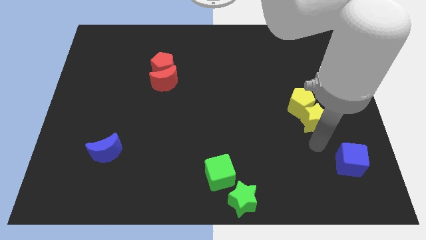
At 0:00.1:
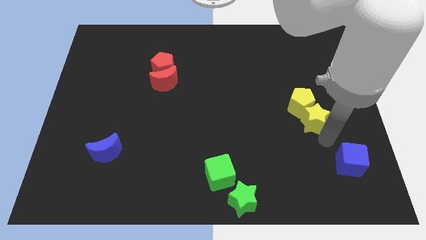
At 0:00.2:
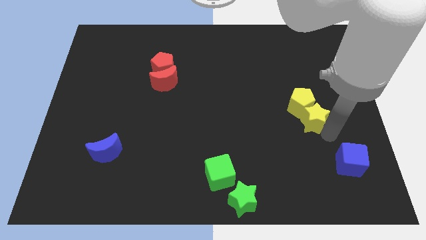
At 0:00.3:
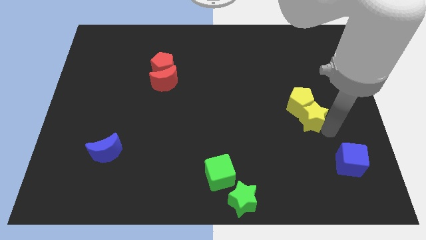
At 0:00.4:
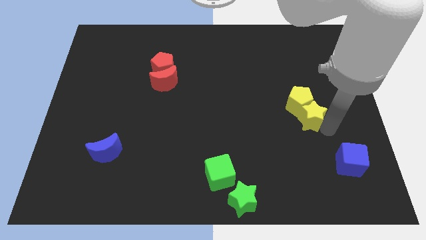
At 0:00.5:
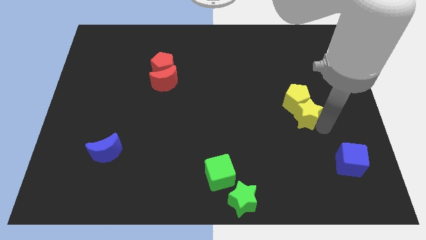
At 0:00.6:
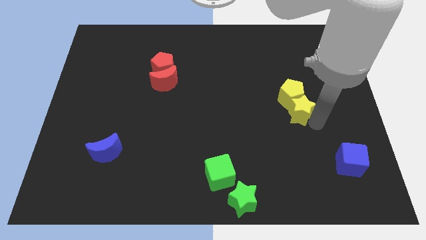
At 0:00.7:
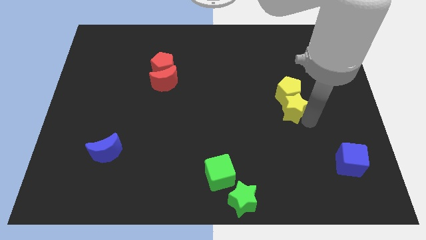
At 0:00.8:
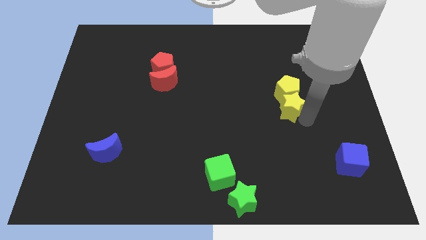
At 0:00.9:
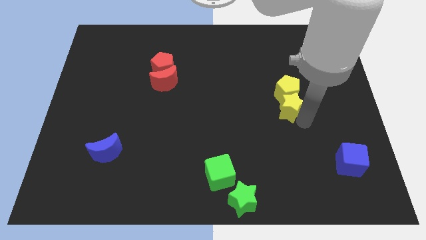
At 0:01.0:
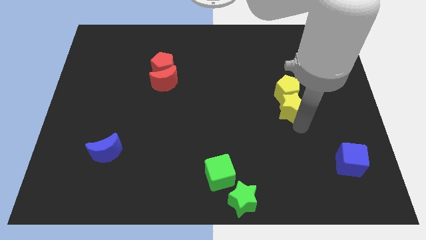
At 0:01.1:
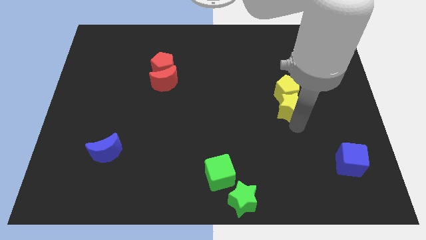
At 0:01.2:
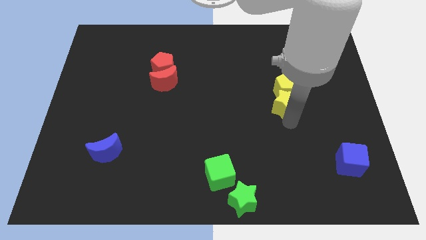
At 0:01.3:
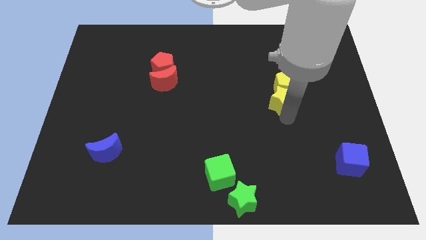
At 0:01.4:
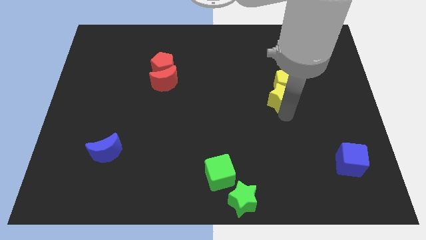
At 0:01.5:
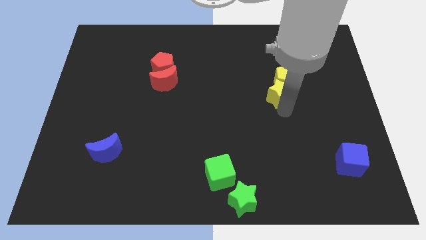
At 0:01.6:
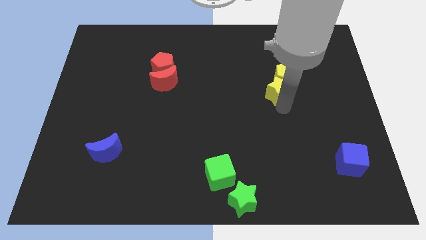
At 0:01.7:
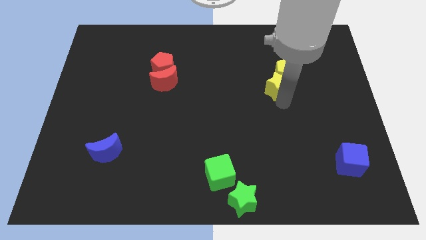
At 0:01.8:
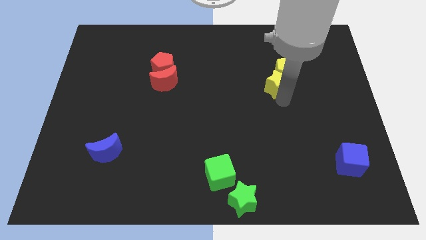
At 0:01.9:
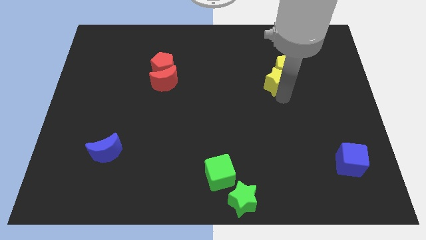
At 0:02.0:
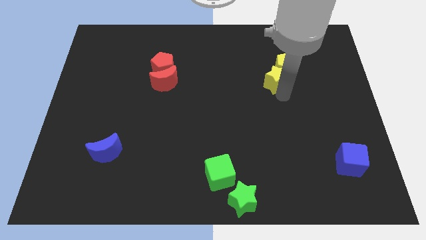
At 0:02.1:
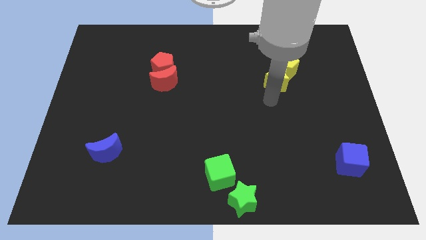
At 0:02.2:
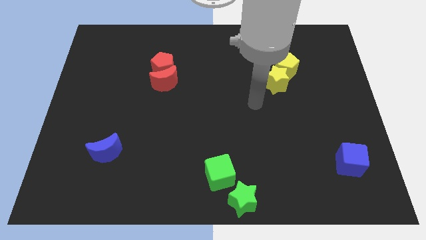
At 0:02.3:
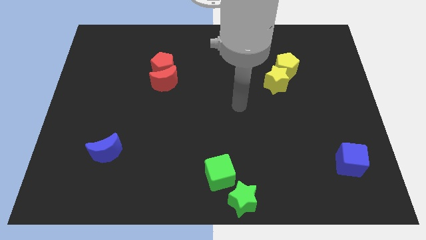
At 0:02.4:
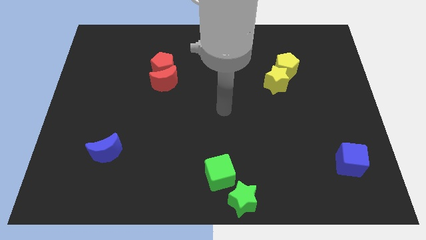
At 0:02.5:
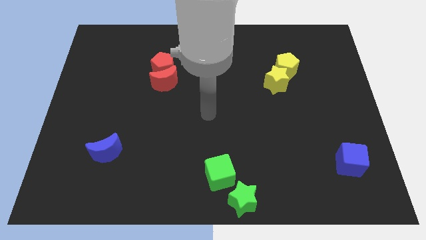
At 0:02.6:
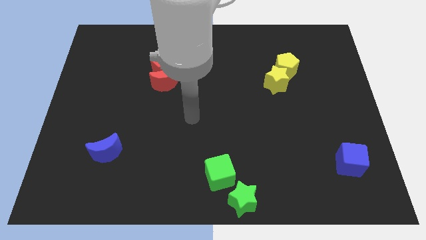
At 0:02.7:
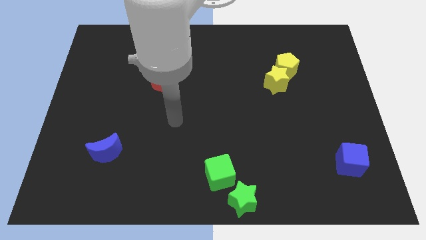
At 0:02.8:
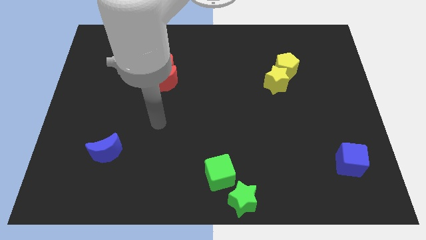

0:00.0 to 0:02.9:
move yellow blocks towards the top side

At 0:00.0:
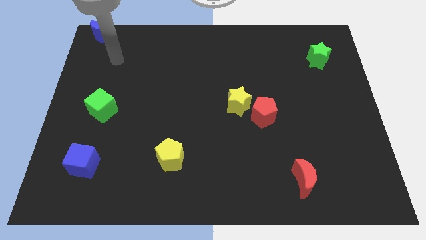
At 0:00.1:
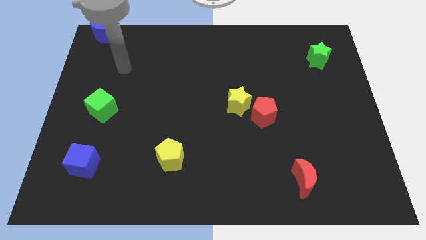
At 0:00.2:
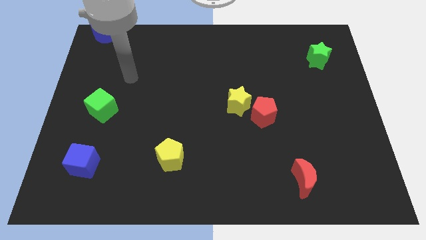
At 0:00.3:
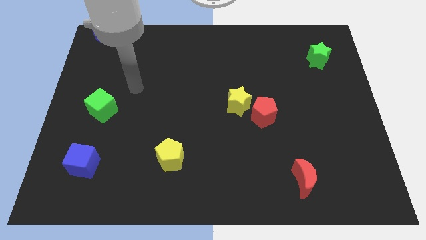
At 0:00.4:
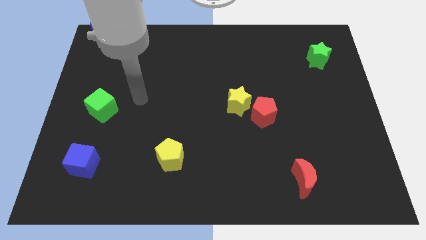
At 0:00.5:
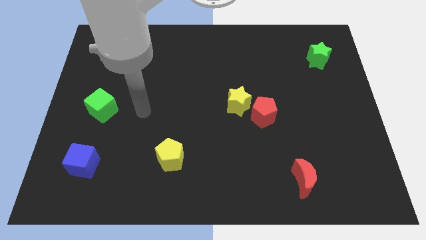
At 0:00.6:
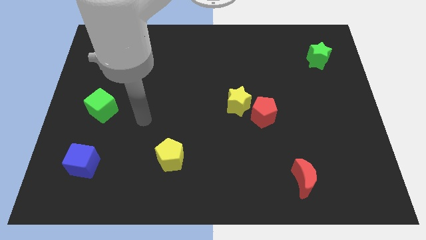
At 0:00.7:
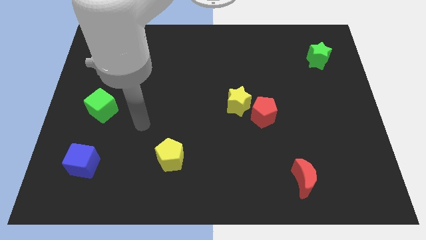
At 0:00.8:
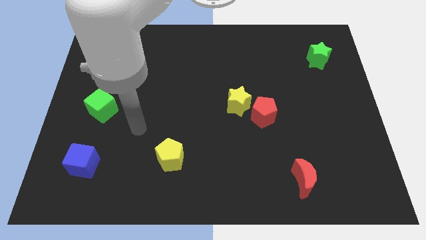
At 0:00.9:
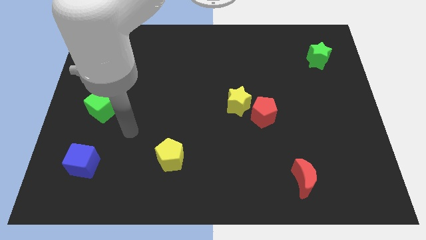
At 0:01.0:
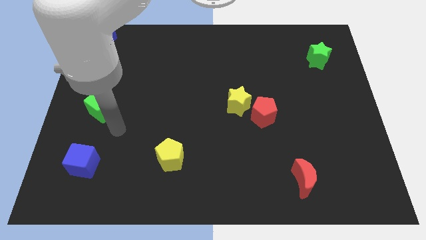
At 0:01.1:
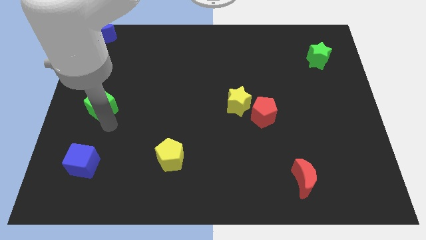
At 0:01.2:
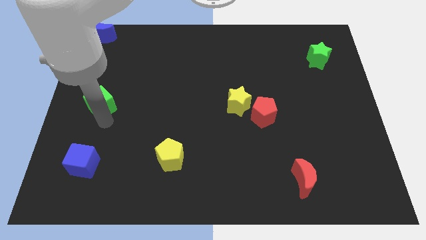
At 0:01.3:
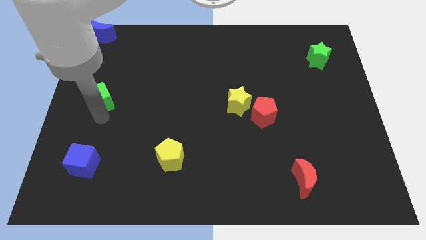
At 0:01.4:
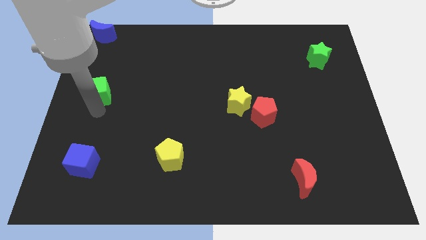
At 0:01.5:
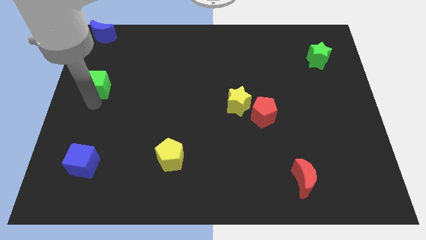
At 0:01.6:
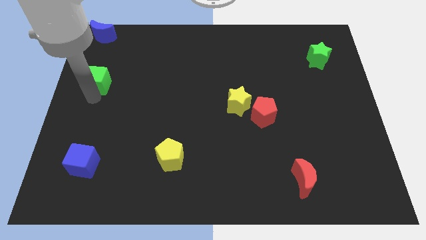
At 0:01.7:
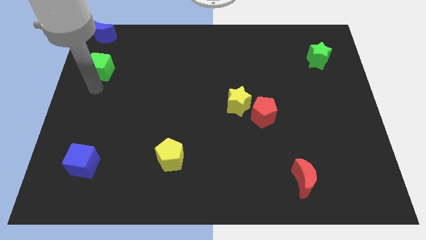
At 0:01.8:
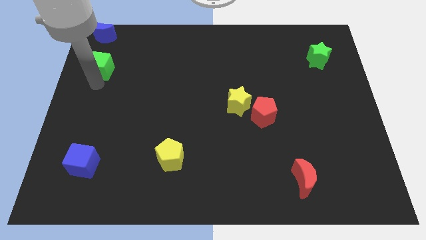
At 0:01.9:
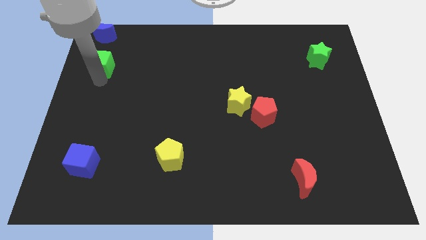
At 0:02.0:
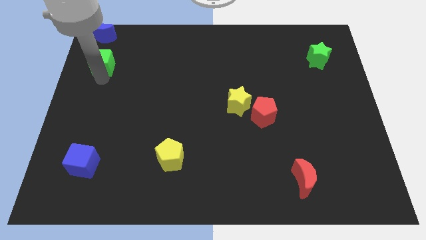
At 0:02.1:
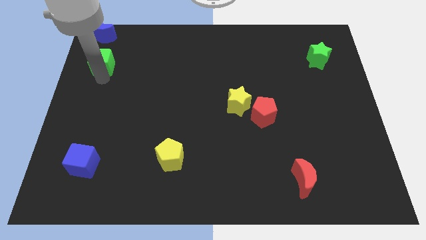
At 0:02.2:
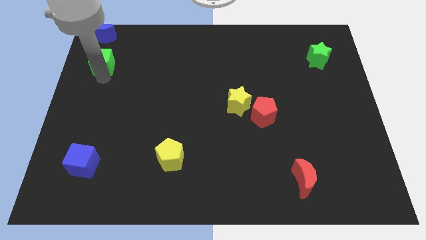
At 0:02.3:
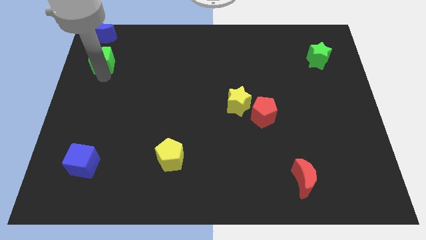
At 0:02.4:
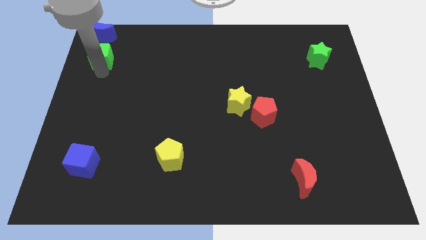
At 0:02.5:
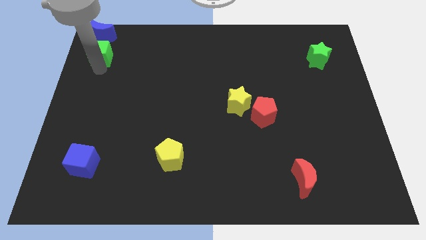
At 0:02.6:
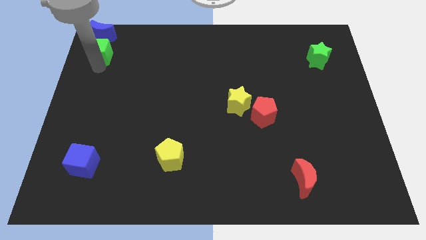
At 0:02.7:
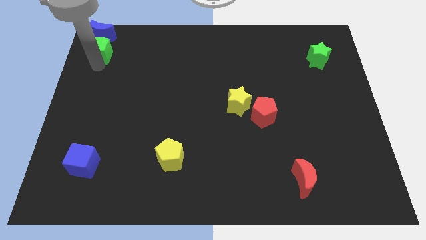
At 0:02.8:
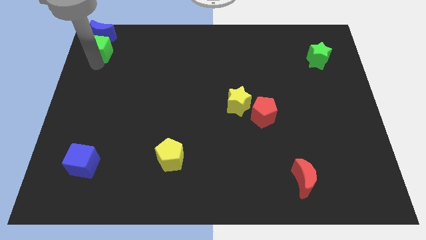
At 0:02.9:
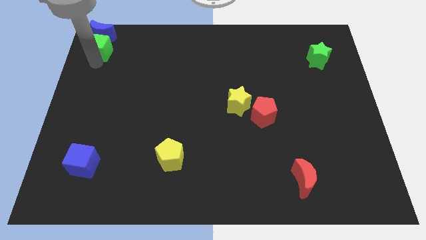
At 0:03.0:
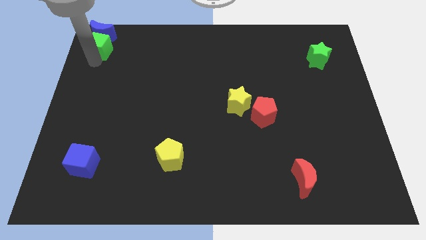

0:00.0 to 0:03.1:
place green cube to the bottom of blue moon

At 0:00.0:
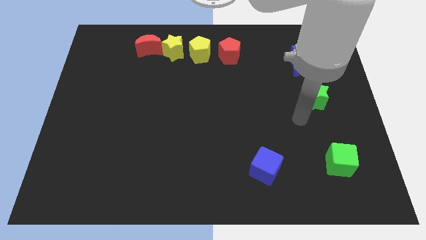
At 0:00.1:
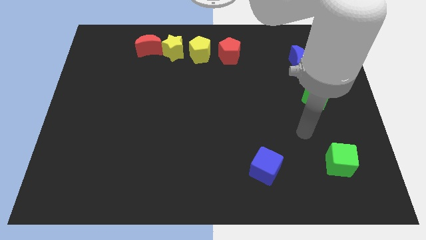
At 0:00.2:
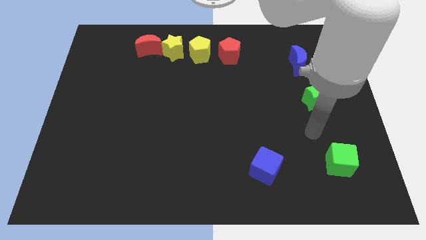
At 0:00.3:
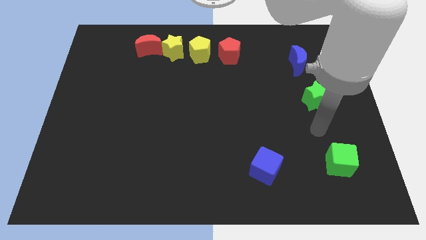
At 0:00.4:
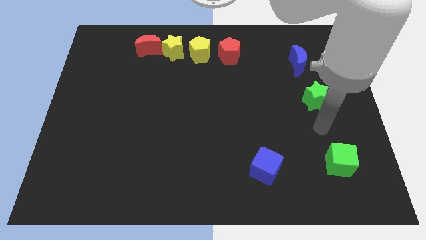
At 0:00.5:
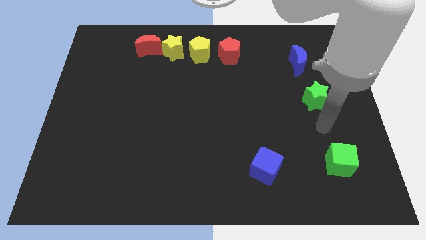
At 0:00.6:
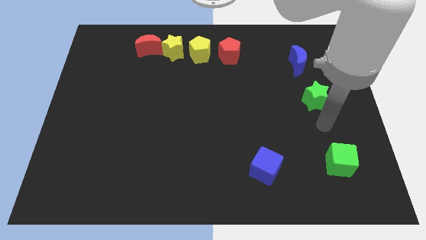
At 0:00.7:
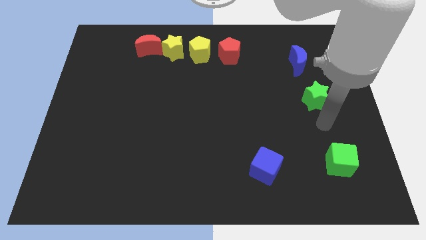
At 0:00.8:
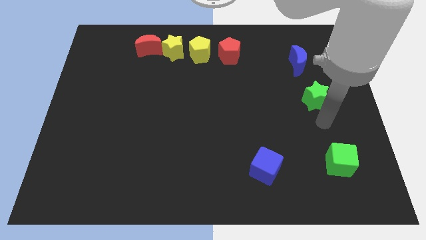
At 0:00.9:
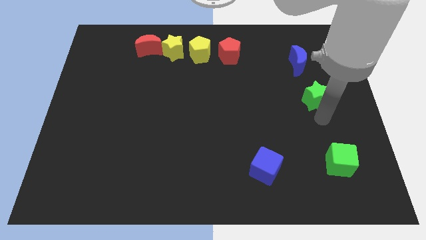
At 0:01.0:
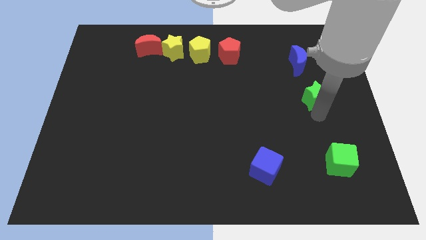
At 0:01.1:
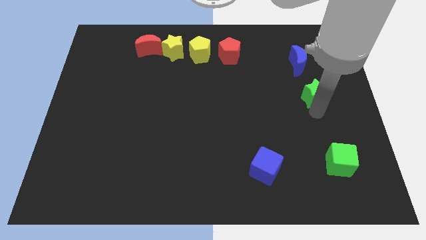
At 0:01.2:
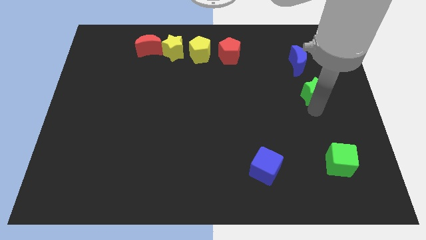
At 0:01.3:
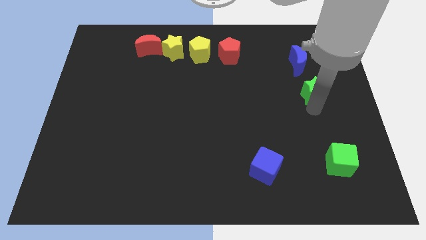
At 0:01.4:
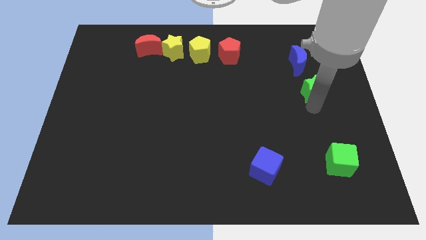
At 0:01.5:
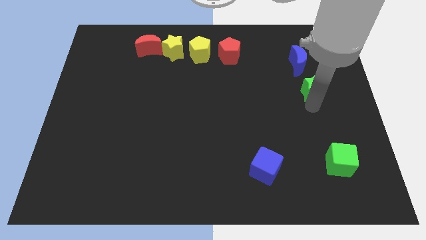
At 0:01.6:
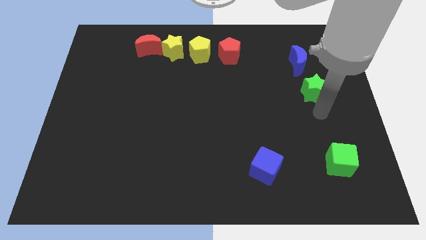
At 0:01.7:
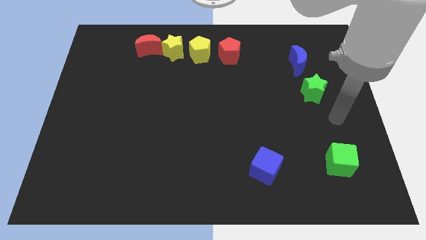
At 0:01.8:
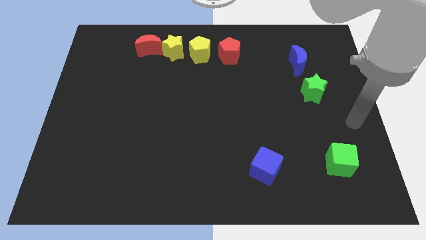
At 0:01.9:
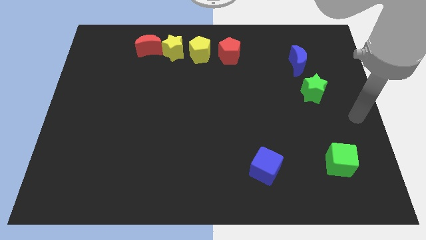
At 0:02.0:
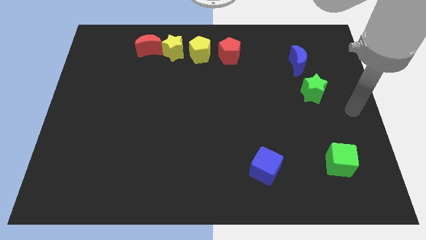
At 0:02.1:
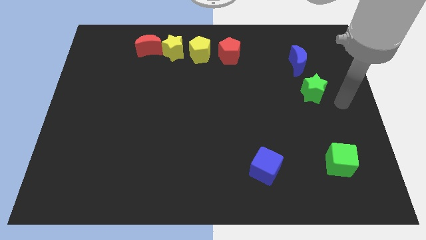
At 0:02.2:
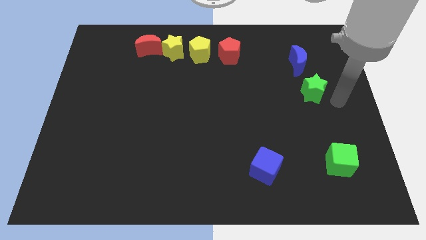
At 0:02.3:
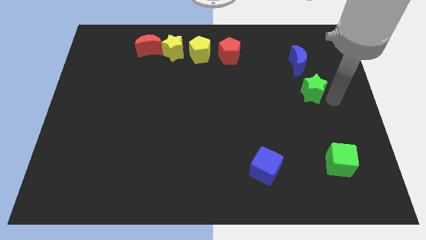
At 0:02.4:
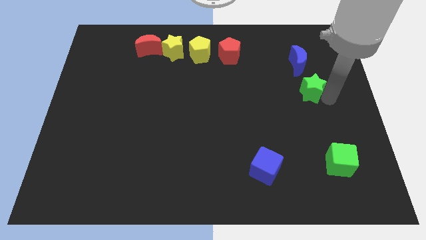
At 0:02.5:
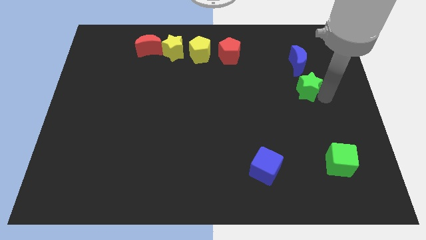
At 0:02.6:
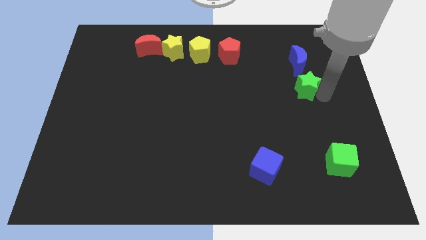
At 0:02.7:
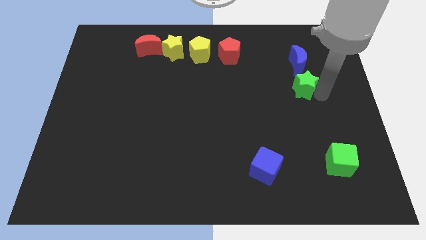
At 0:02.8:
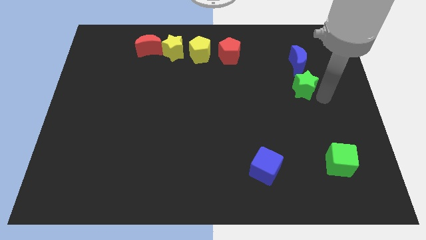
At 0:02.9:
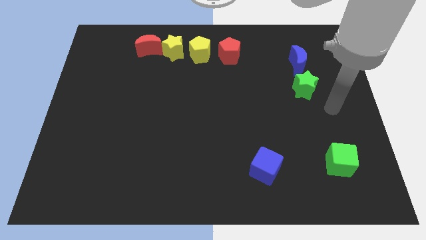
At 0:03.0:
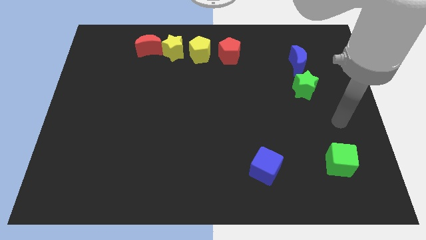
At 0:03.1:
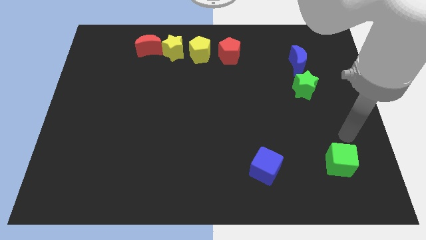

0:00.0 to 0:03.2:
push the green star into the blue moon
